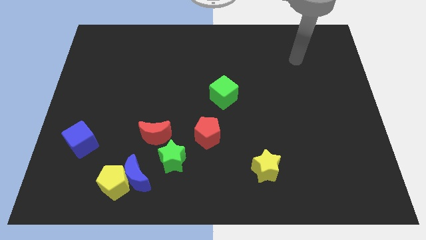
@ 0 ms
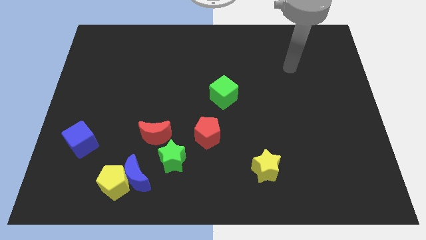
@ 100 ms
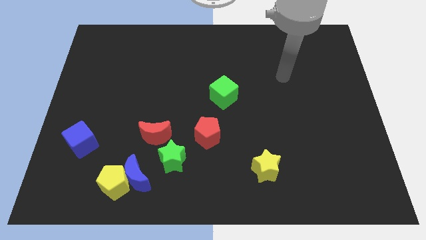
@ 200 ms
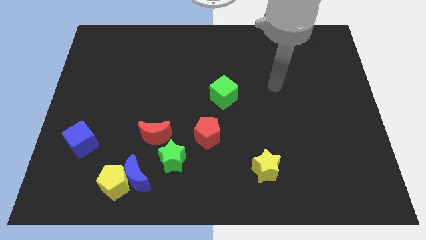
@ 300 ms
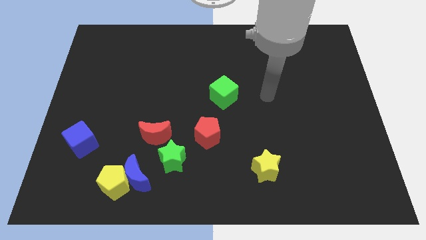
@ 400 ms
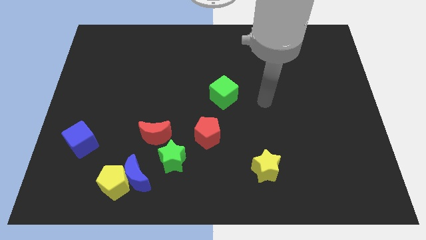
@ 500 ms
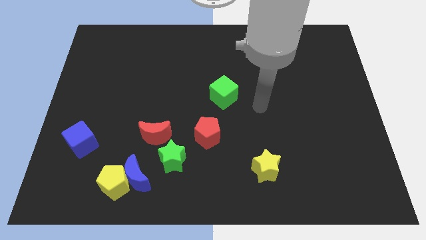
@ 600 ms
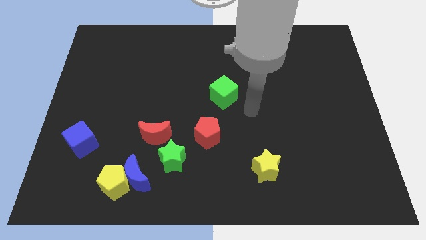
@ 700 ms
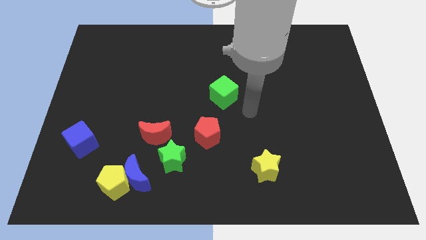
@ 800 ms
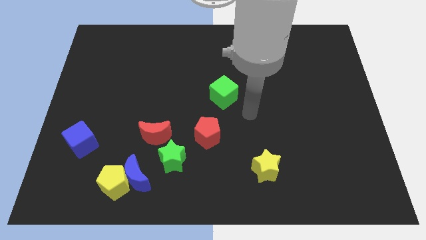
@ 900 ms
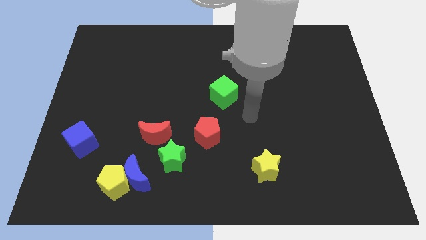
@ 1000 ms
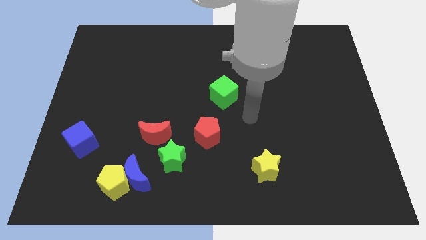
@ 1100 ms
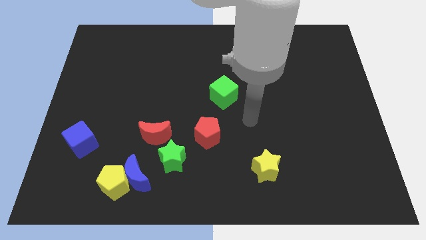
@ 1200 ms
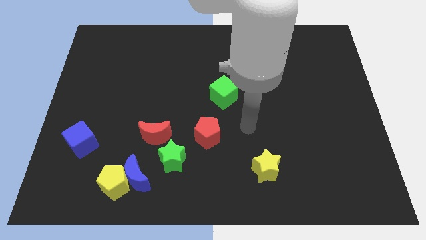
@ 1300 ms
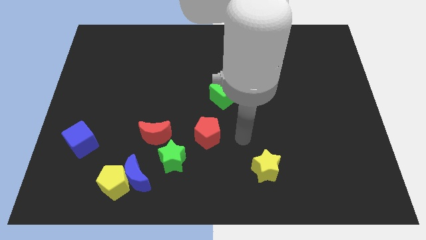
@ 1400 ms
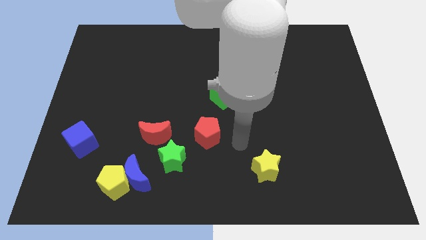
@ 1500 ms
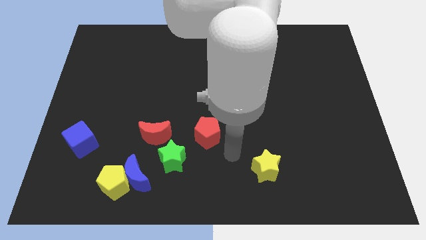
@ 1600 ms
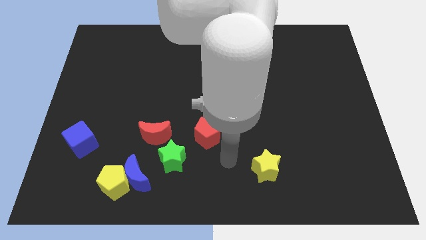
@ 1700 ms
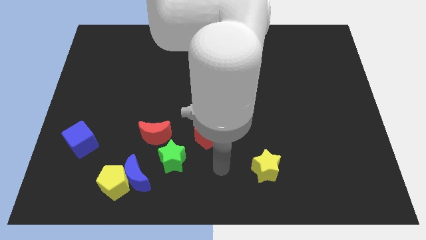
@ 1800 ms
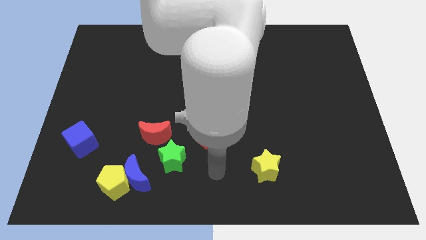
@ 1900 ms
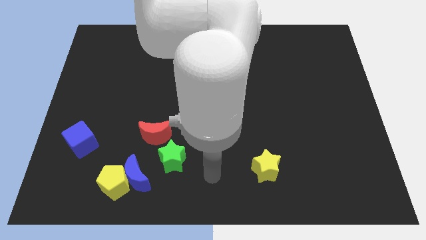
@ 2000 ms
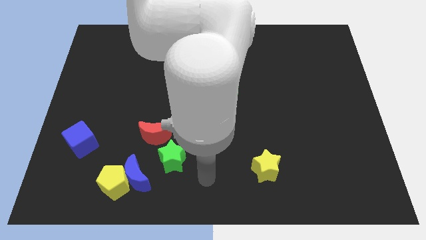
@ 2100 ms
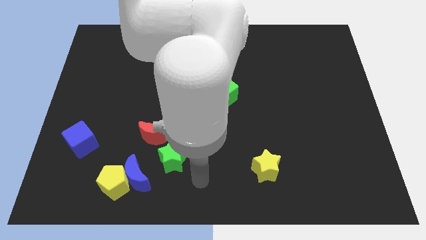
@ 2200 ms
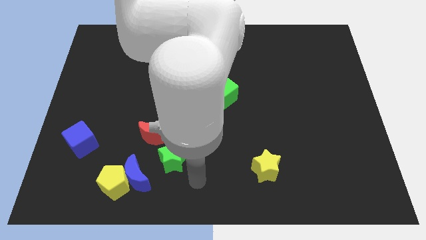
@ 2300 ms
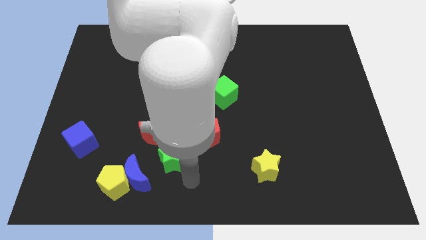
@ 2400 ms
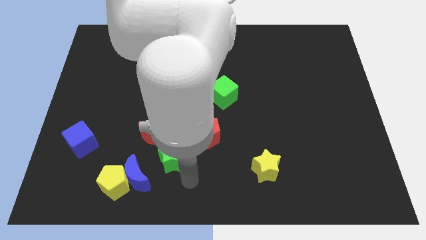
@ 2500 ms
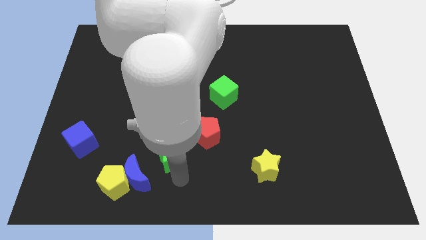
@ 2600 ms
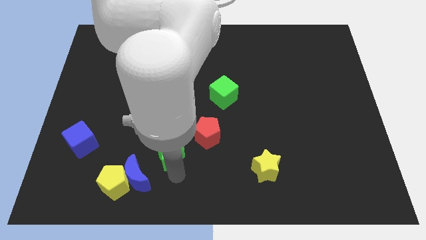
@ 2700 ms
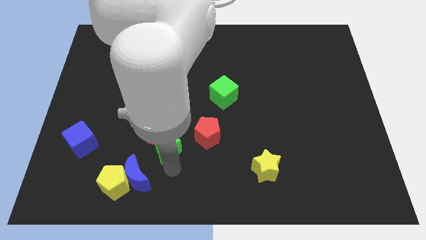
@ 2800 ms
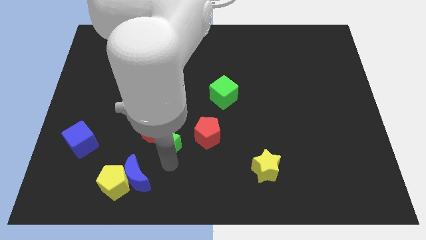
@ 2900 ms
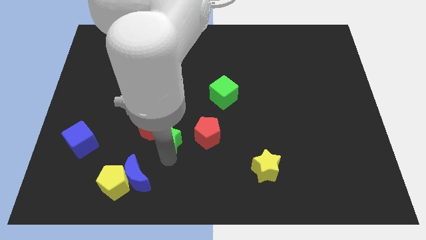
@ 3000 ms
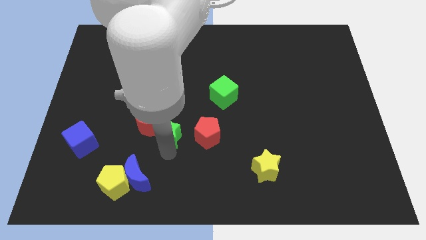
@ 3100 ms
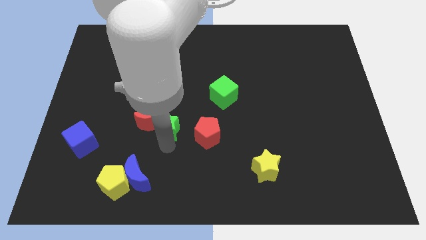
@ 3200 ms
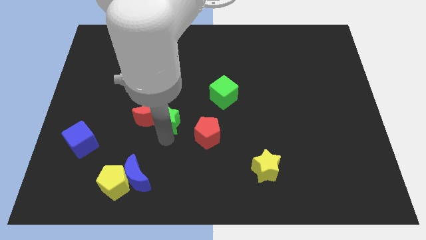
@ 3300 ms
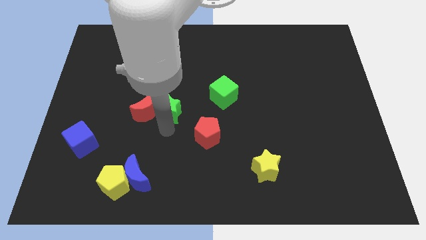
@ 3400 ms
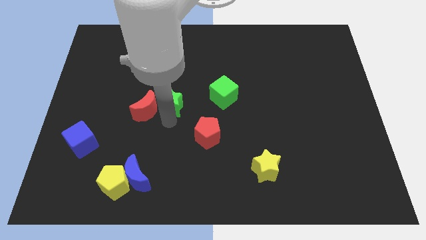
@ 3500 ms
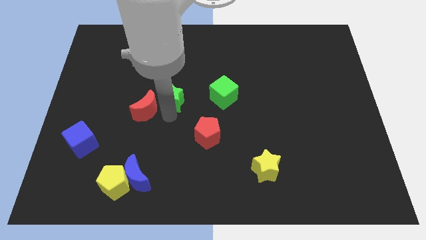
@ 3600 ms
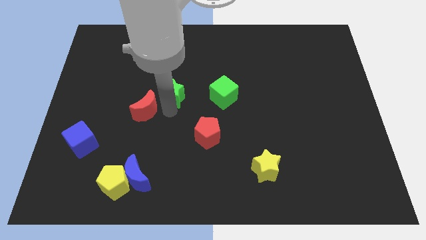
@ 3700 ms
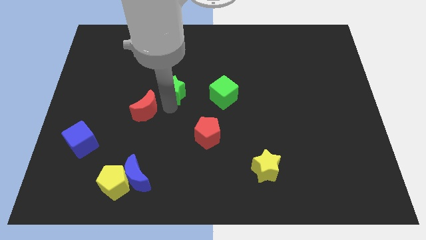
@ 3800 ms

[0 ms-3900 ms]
move the green star to the left of the green cube

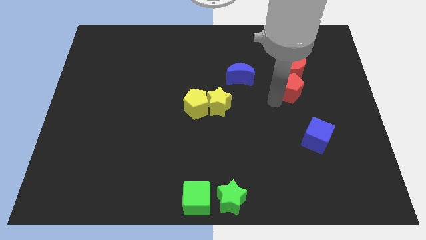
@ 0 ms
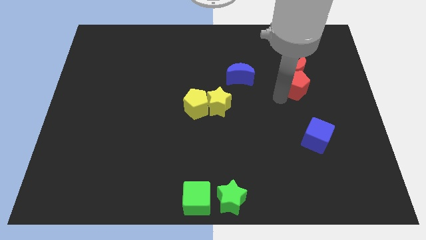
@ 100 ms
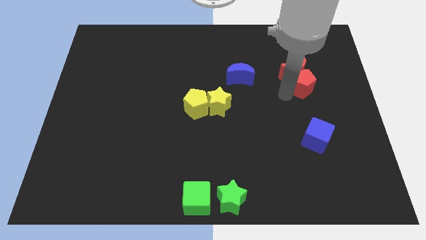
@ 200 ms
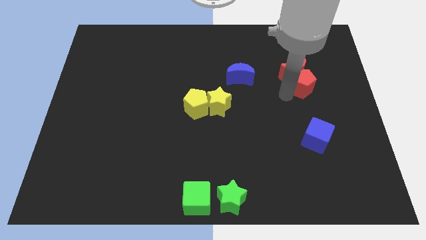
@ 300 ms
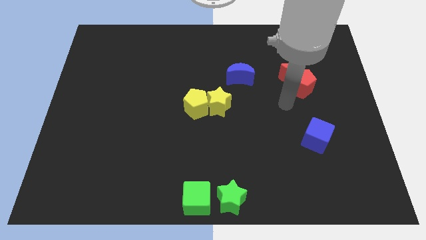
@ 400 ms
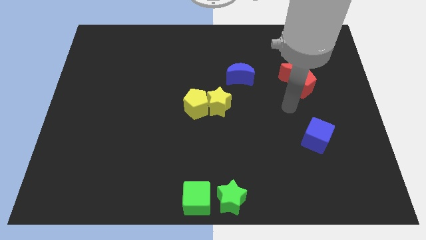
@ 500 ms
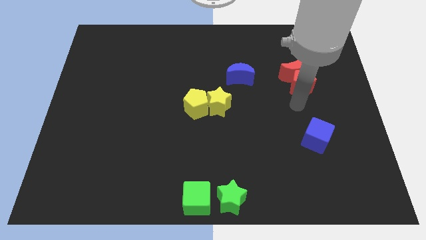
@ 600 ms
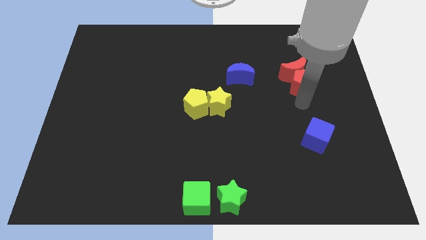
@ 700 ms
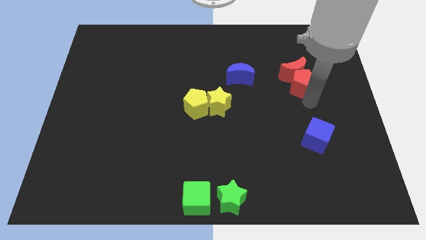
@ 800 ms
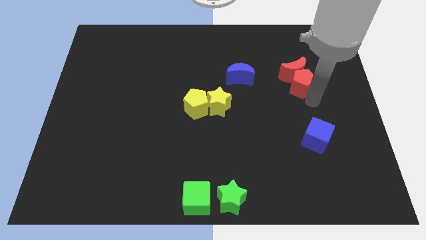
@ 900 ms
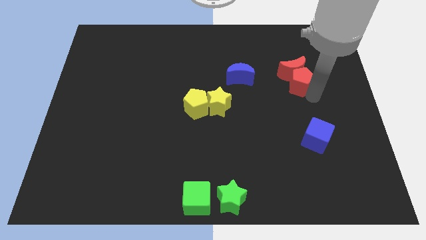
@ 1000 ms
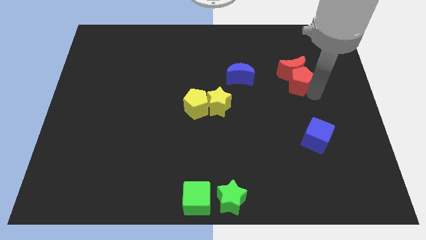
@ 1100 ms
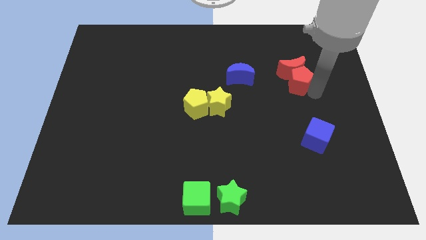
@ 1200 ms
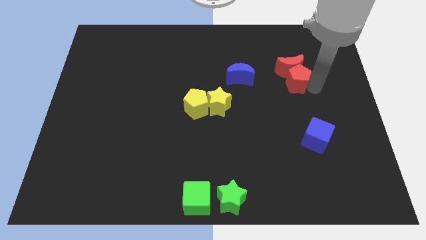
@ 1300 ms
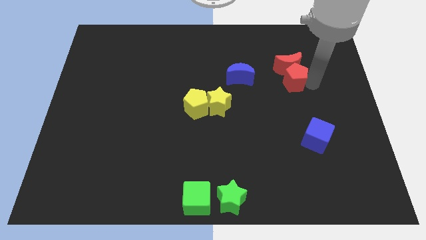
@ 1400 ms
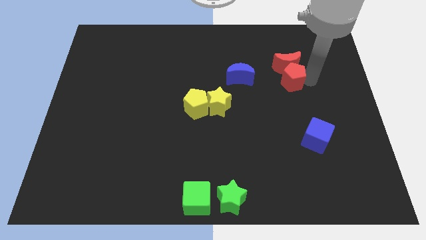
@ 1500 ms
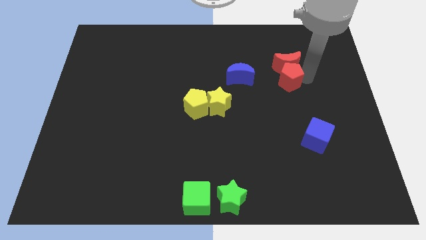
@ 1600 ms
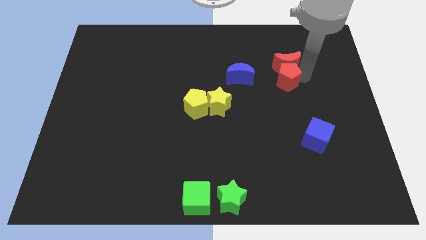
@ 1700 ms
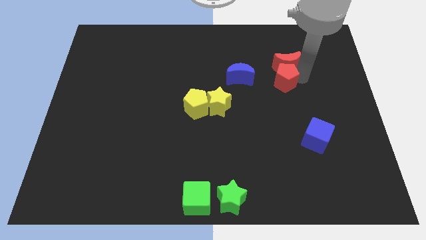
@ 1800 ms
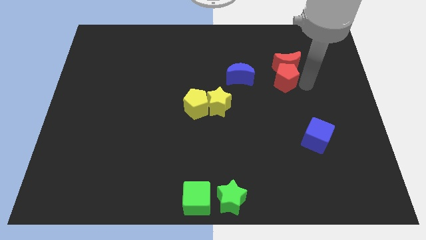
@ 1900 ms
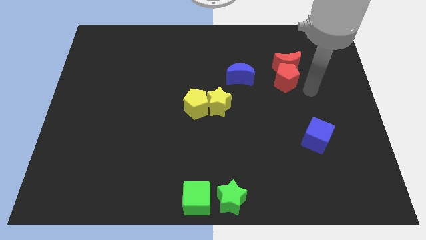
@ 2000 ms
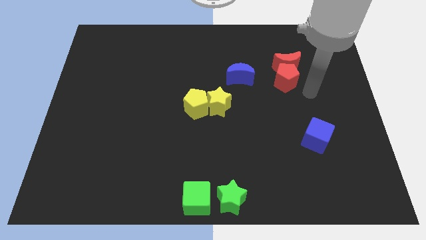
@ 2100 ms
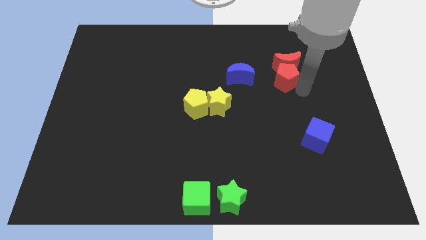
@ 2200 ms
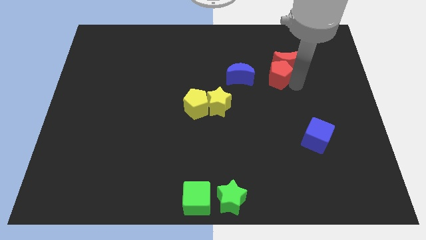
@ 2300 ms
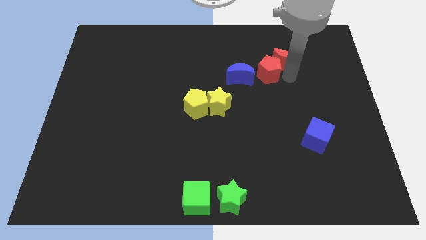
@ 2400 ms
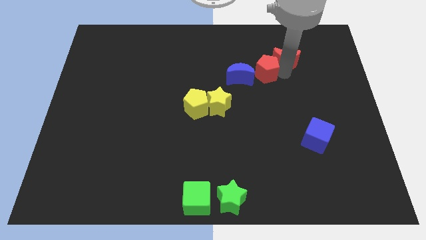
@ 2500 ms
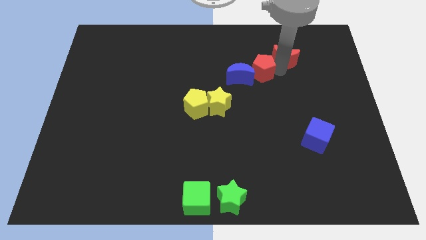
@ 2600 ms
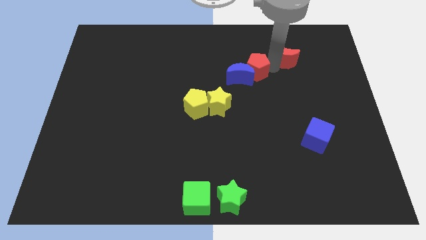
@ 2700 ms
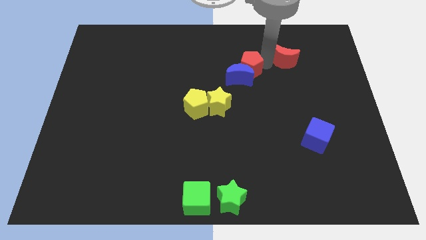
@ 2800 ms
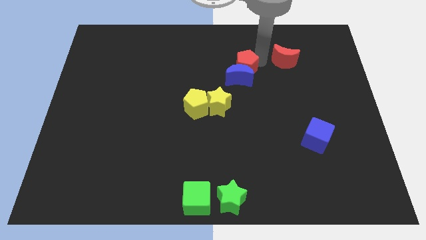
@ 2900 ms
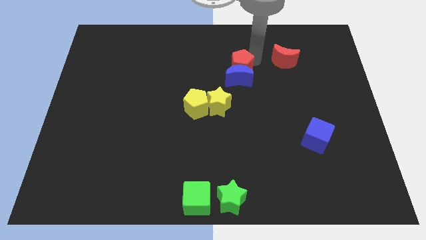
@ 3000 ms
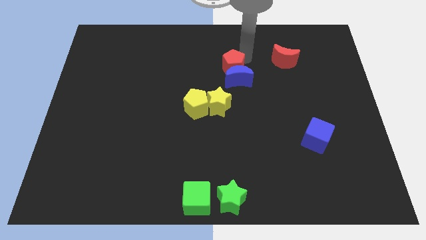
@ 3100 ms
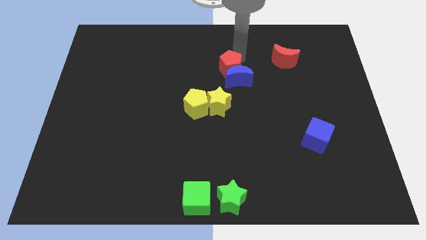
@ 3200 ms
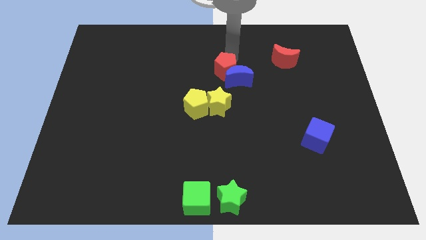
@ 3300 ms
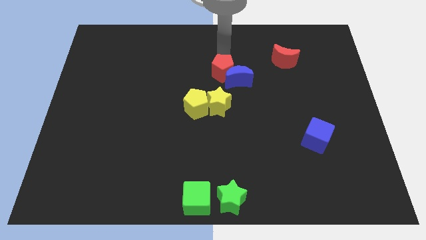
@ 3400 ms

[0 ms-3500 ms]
place red pentagon on top left side of blue crescent

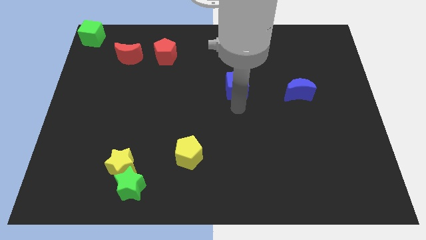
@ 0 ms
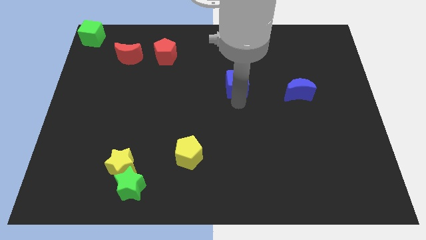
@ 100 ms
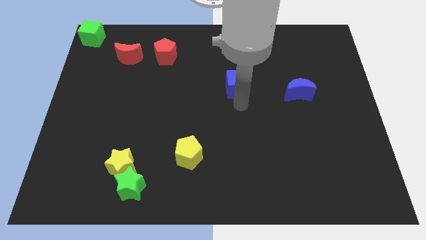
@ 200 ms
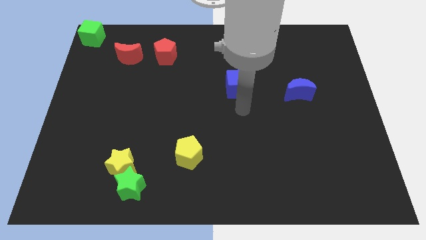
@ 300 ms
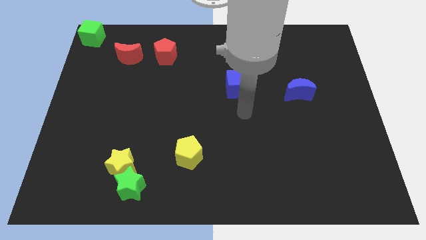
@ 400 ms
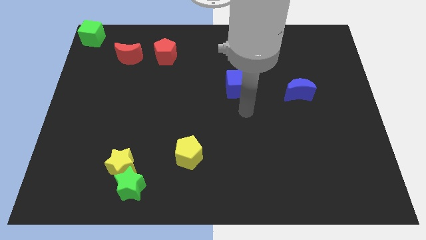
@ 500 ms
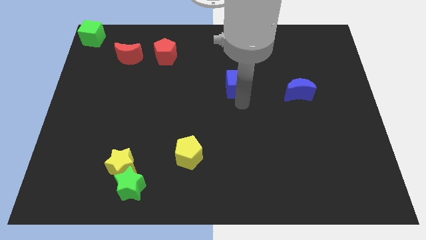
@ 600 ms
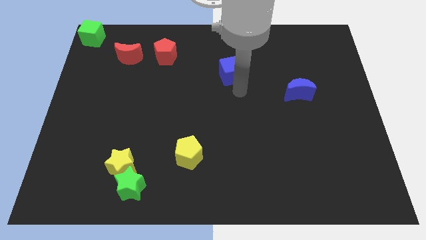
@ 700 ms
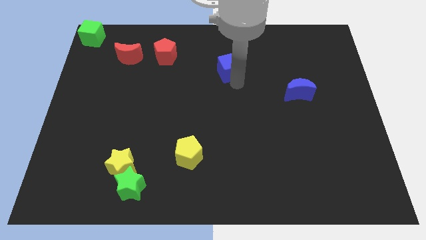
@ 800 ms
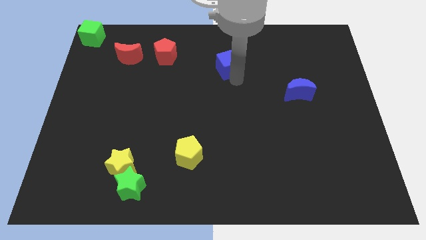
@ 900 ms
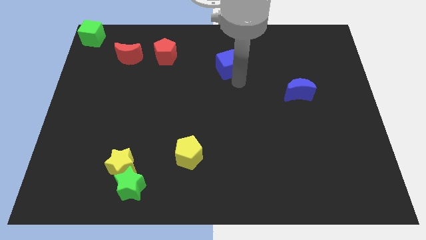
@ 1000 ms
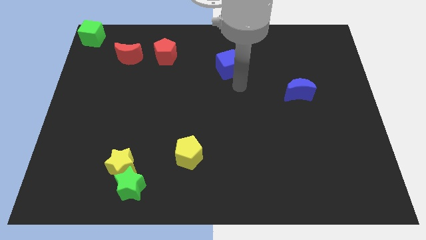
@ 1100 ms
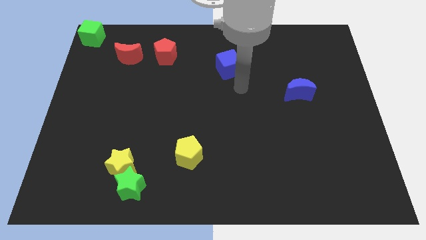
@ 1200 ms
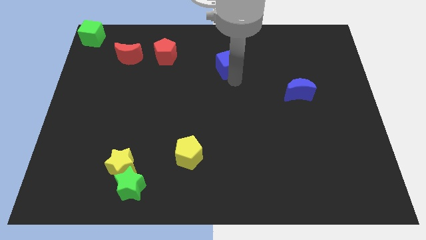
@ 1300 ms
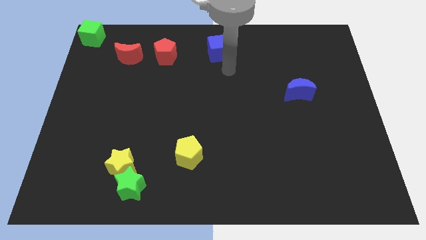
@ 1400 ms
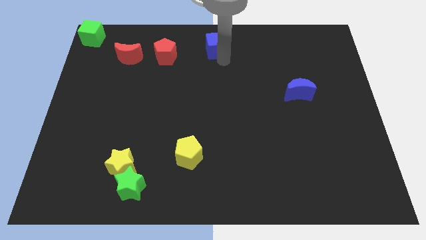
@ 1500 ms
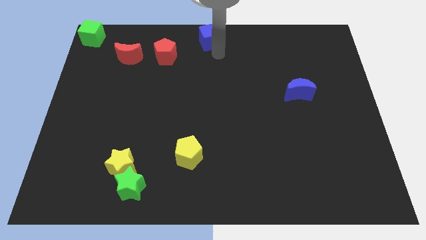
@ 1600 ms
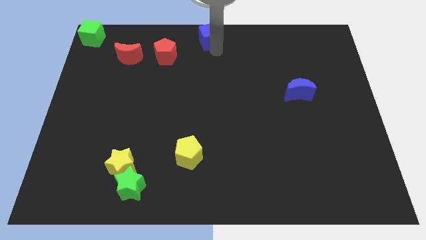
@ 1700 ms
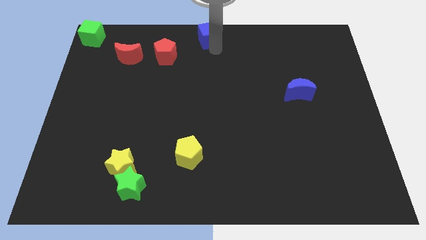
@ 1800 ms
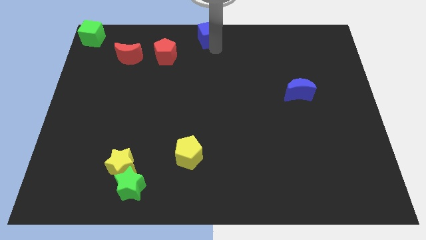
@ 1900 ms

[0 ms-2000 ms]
slide the blue cube to the top center
